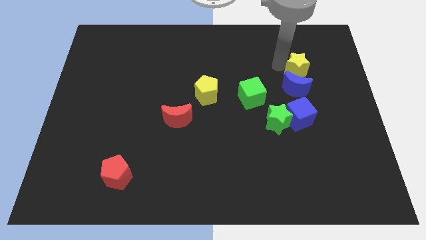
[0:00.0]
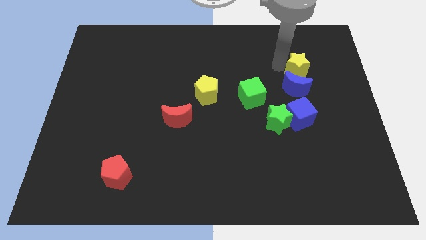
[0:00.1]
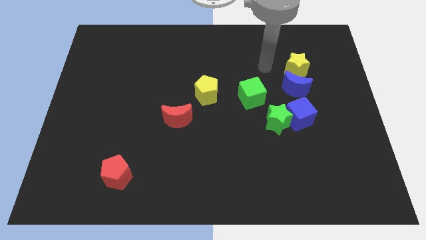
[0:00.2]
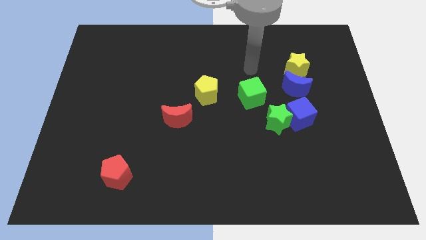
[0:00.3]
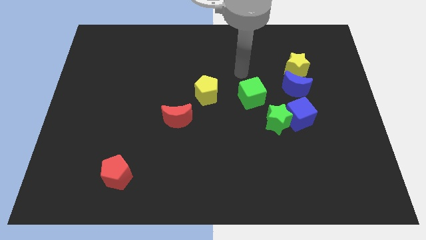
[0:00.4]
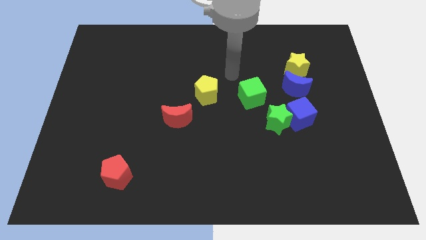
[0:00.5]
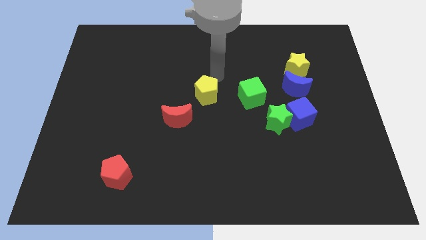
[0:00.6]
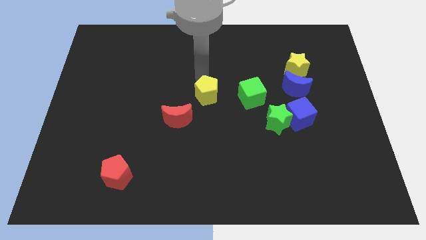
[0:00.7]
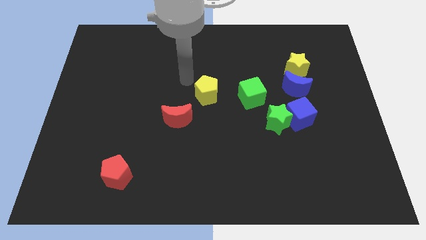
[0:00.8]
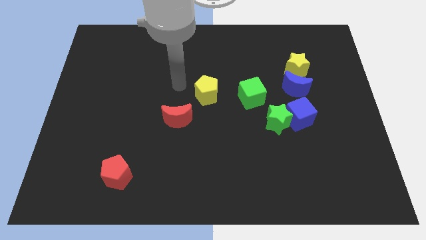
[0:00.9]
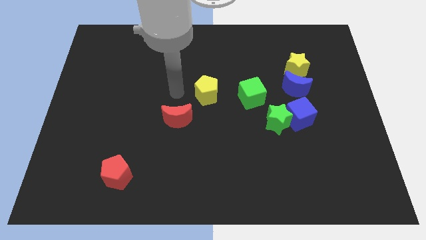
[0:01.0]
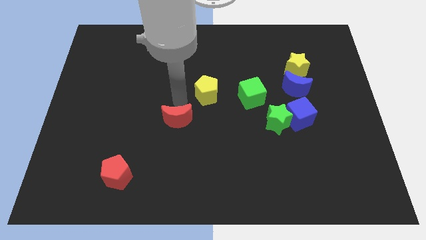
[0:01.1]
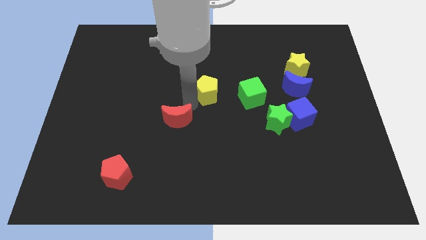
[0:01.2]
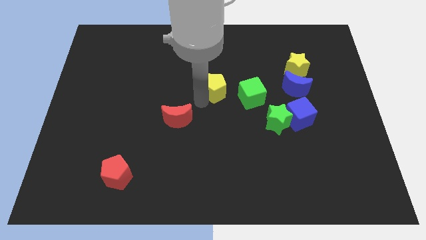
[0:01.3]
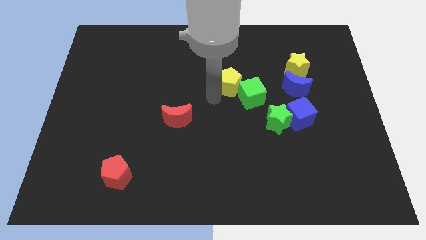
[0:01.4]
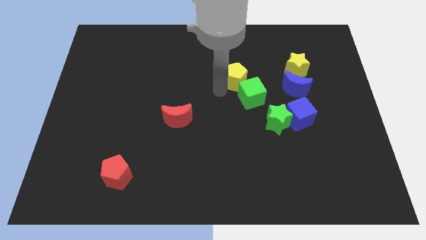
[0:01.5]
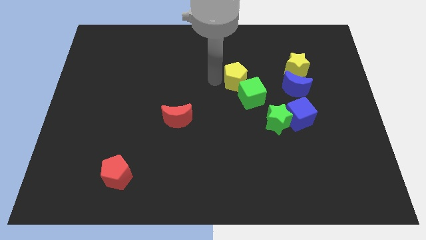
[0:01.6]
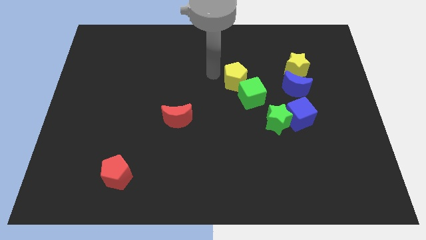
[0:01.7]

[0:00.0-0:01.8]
place the yellow pentagon slightly above the green cube

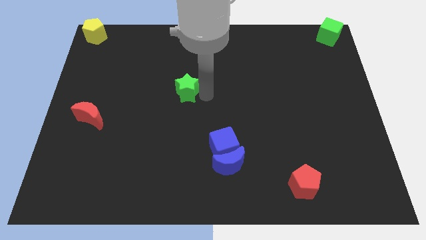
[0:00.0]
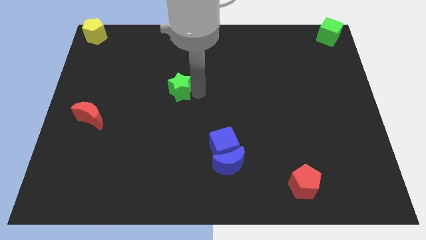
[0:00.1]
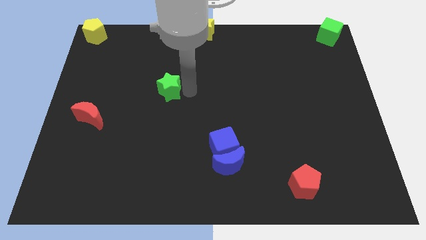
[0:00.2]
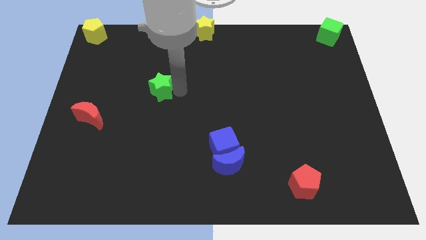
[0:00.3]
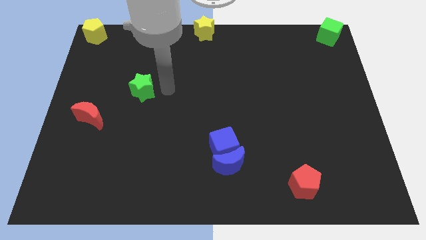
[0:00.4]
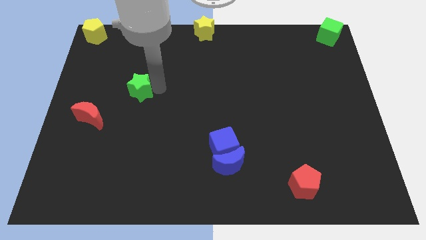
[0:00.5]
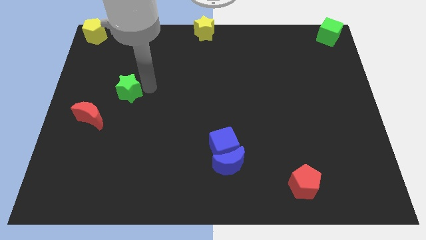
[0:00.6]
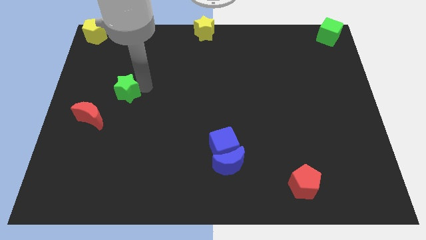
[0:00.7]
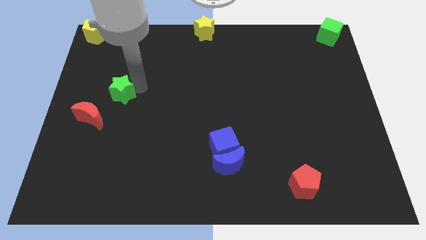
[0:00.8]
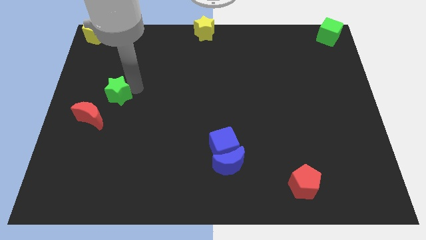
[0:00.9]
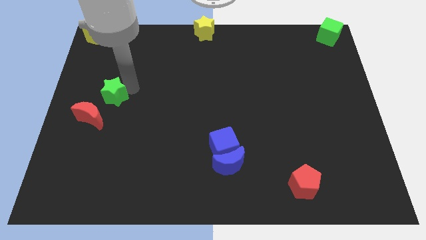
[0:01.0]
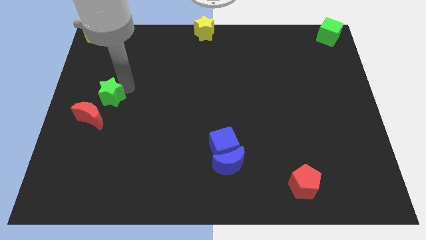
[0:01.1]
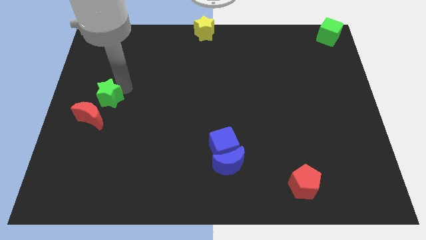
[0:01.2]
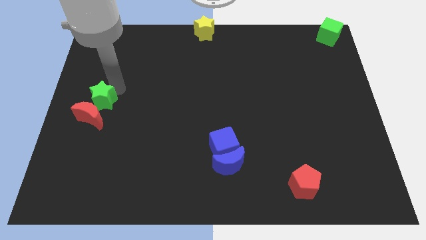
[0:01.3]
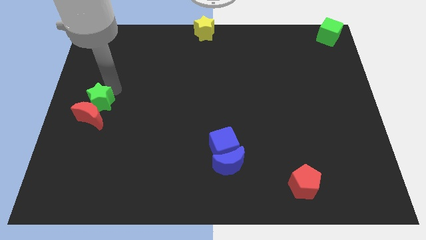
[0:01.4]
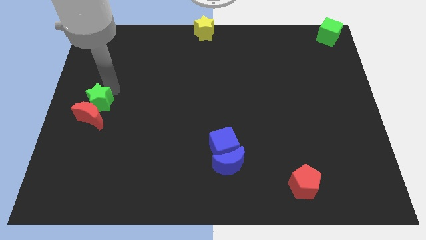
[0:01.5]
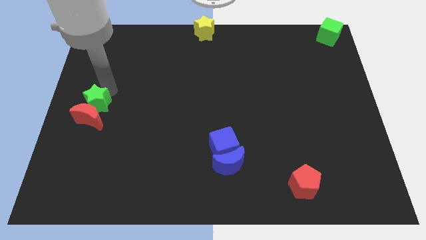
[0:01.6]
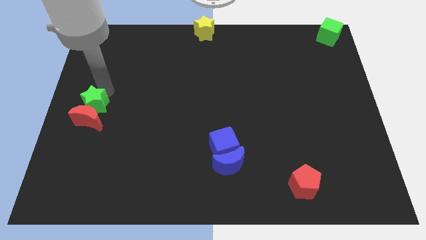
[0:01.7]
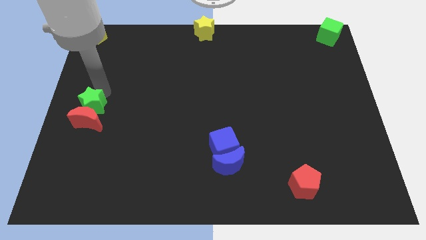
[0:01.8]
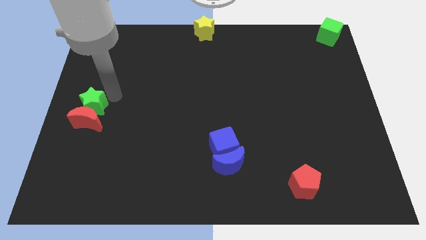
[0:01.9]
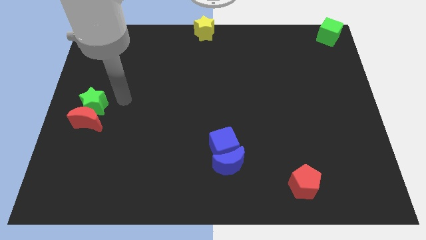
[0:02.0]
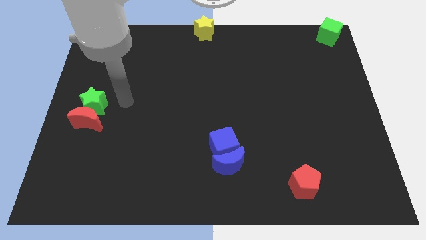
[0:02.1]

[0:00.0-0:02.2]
push the green star into the red moon

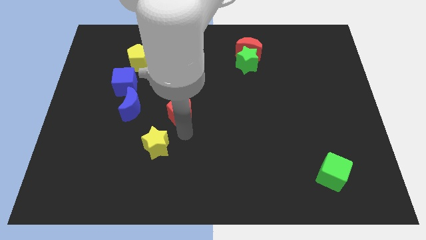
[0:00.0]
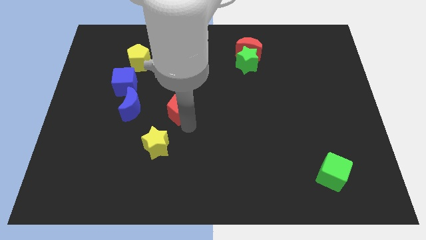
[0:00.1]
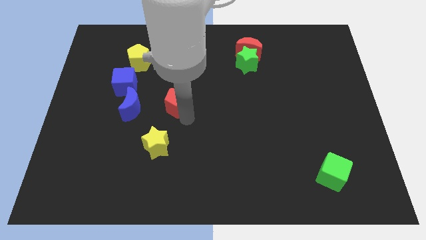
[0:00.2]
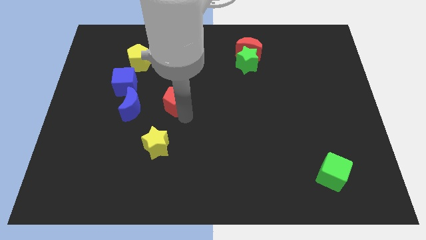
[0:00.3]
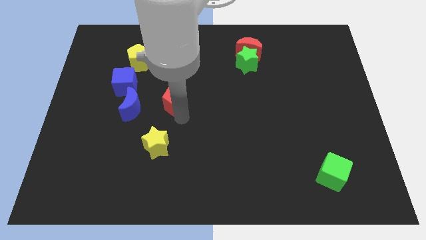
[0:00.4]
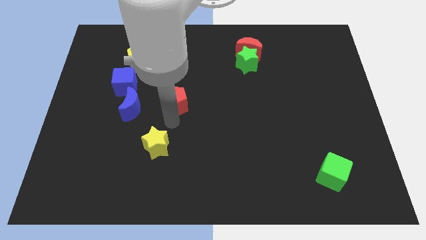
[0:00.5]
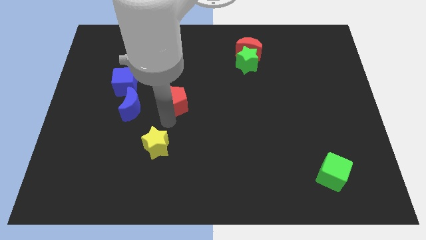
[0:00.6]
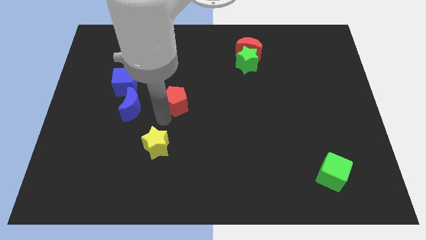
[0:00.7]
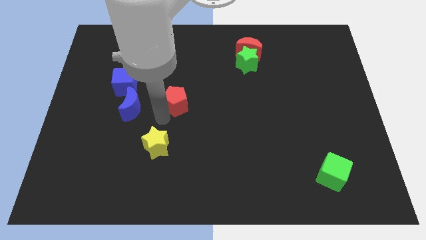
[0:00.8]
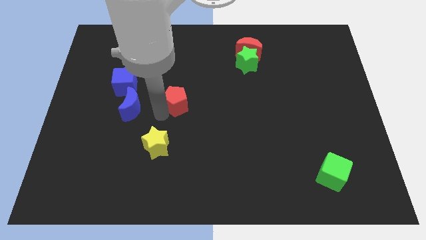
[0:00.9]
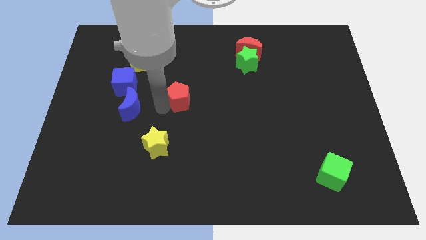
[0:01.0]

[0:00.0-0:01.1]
slide red pentagon up slightly

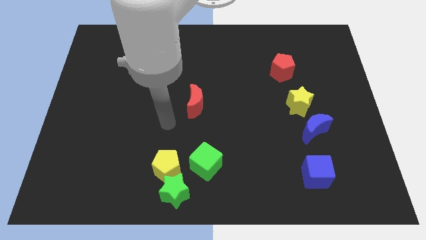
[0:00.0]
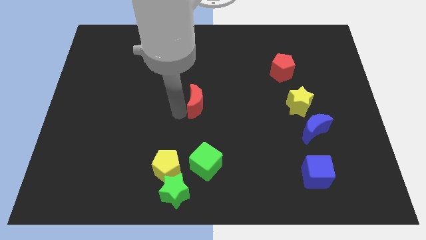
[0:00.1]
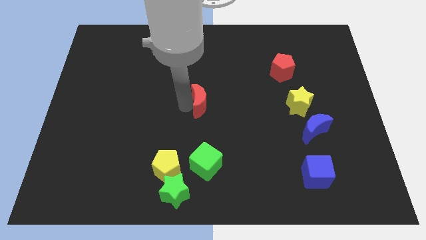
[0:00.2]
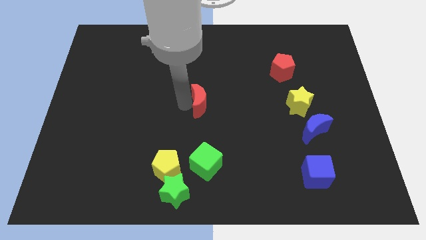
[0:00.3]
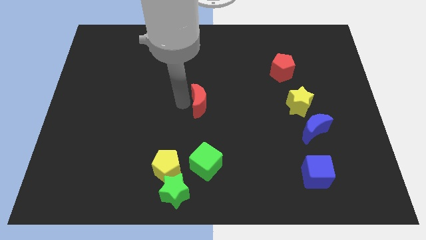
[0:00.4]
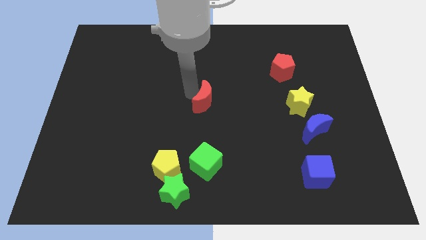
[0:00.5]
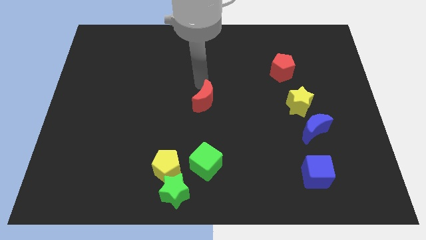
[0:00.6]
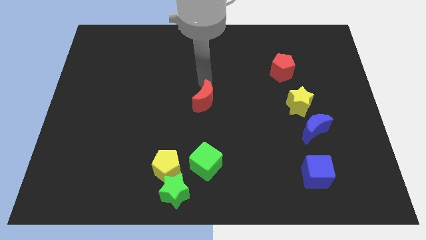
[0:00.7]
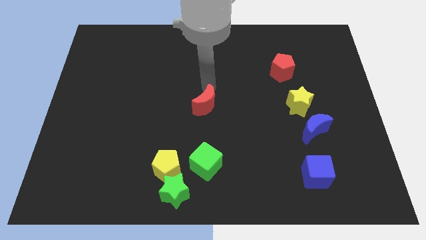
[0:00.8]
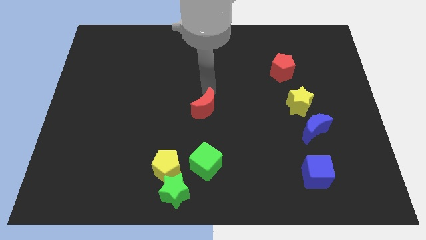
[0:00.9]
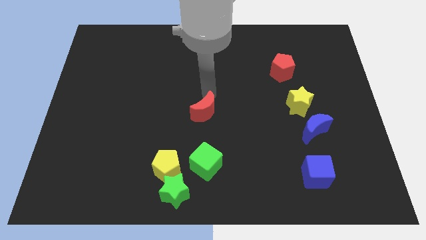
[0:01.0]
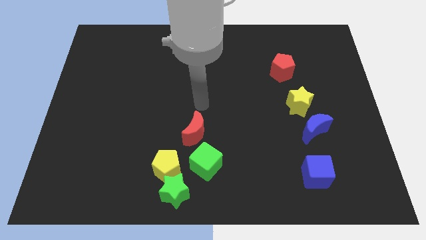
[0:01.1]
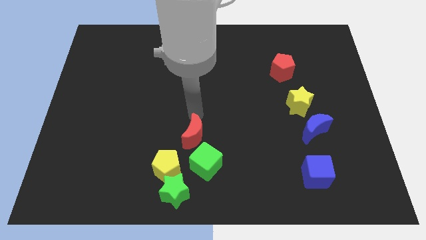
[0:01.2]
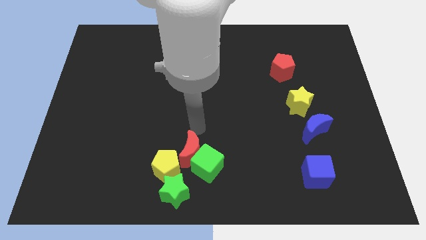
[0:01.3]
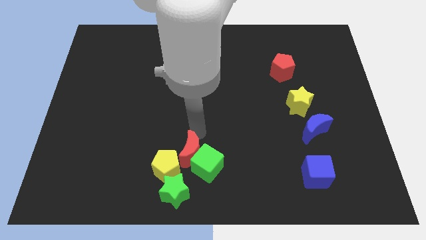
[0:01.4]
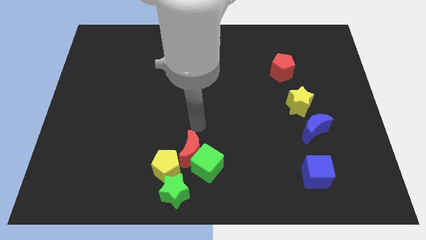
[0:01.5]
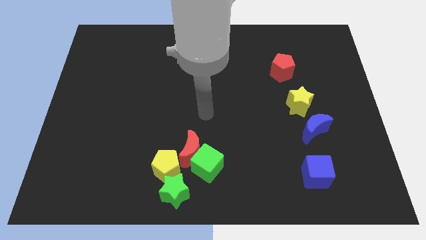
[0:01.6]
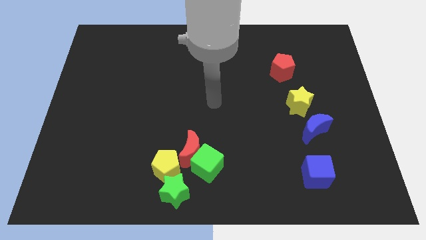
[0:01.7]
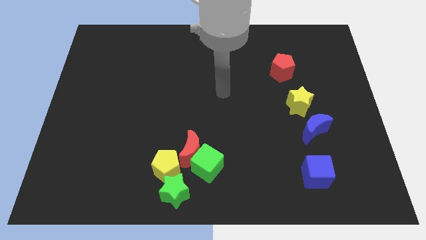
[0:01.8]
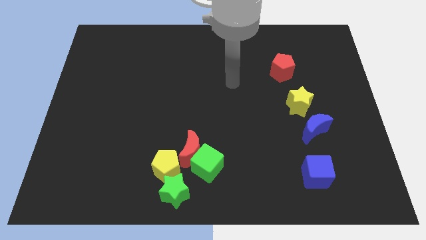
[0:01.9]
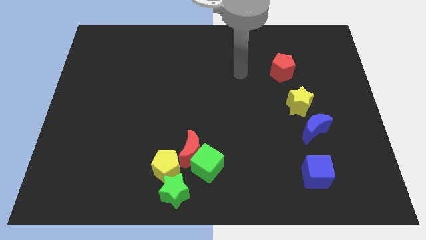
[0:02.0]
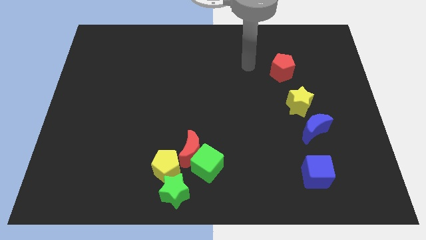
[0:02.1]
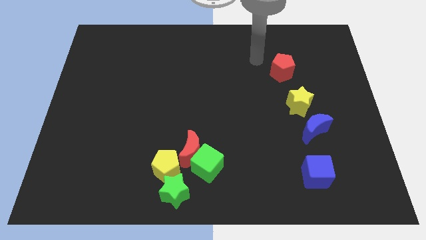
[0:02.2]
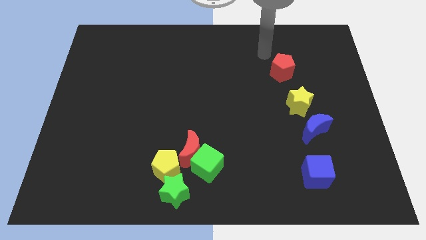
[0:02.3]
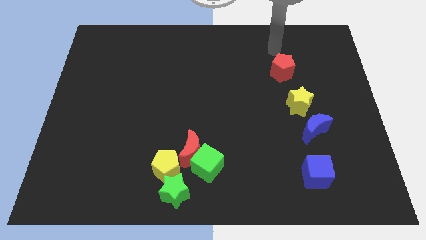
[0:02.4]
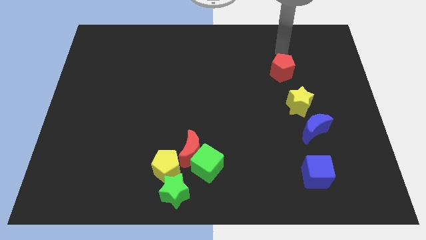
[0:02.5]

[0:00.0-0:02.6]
push the red crescent to the top left of the green cube

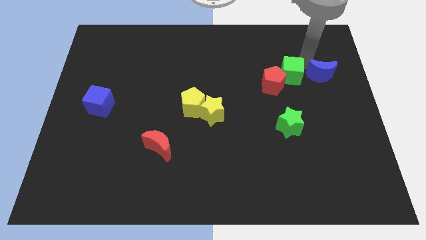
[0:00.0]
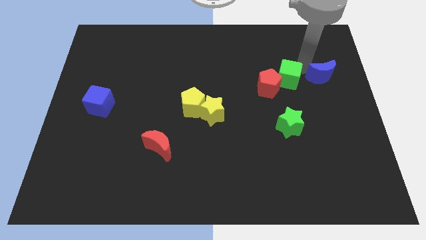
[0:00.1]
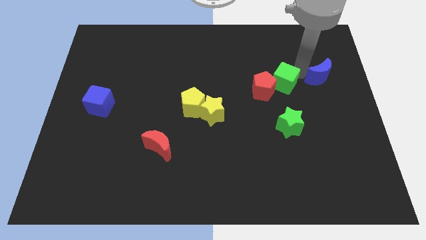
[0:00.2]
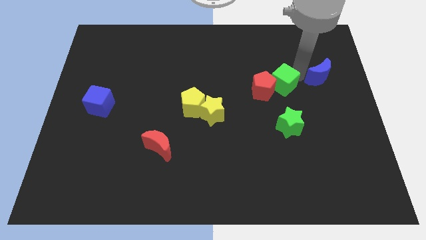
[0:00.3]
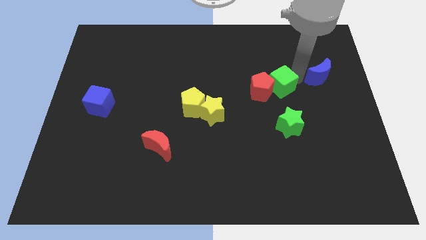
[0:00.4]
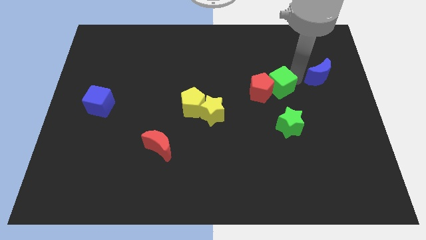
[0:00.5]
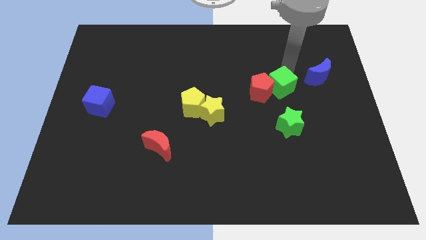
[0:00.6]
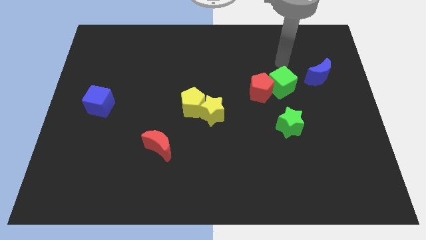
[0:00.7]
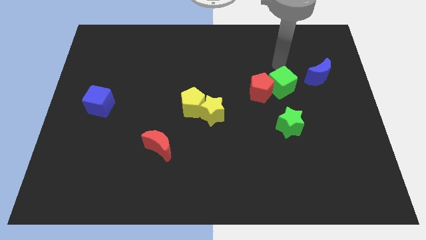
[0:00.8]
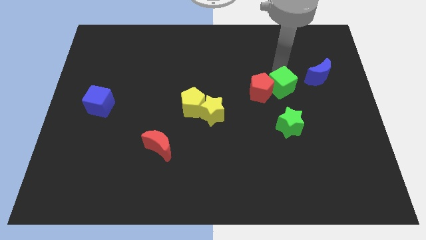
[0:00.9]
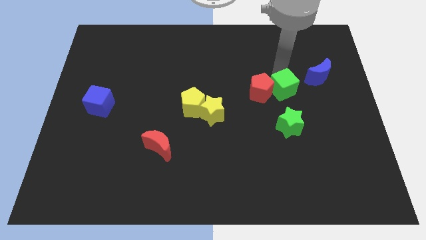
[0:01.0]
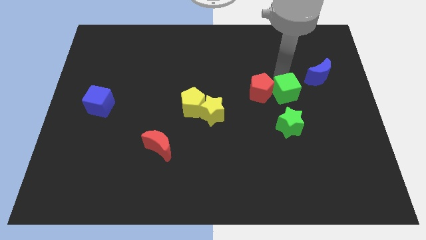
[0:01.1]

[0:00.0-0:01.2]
push red pentagon with green cube

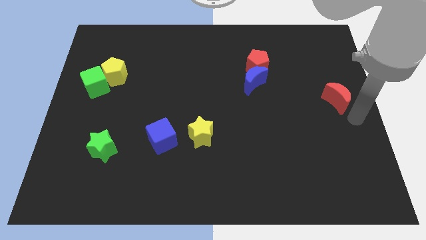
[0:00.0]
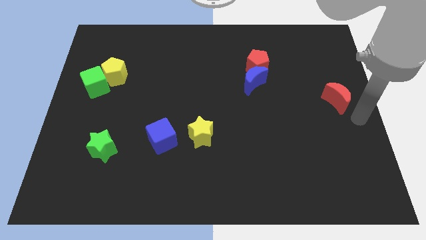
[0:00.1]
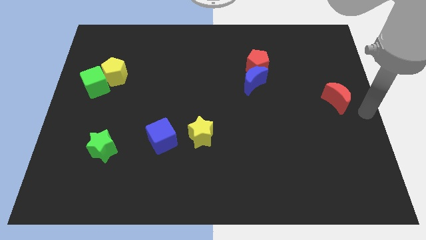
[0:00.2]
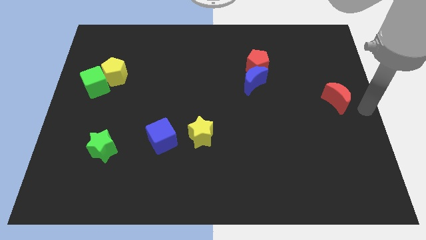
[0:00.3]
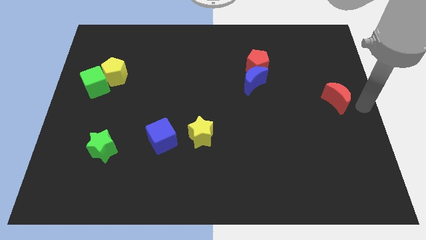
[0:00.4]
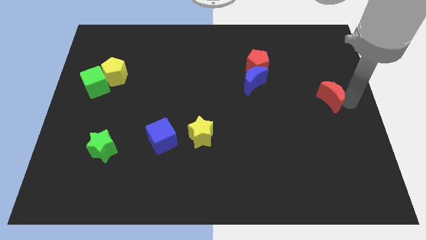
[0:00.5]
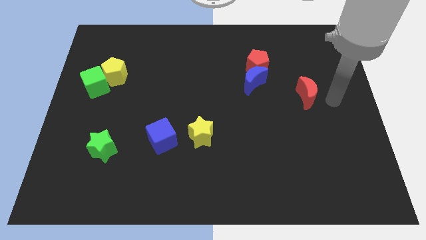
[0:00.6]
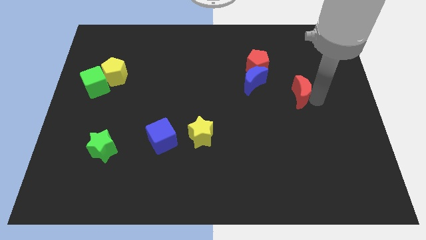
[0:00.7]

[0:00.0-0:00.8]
push the red moon to the left side of the board
